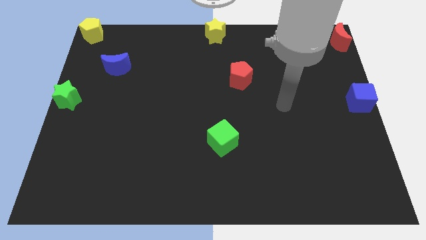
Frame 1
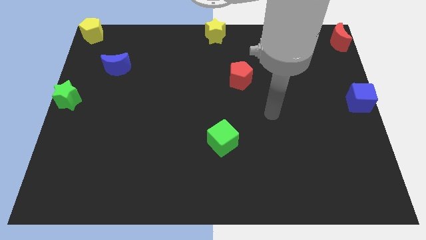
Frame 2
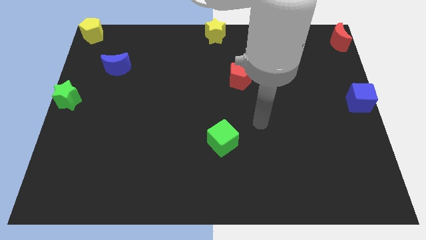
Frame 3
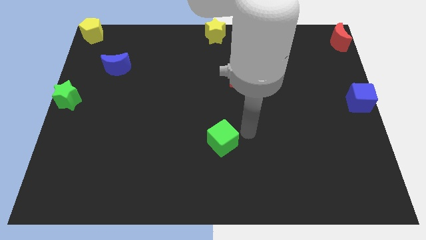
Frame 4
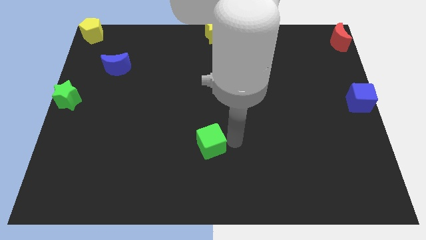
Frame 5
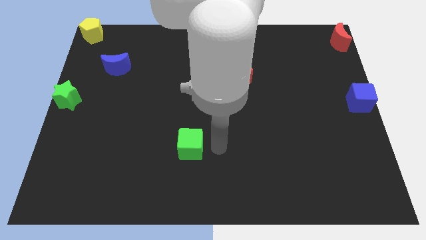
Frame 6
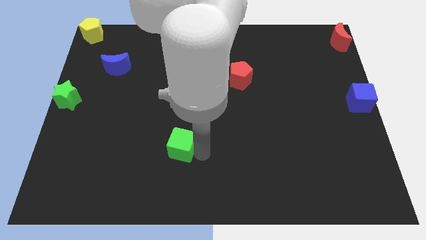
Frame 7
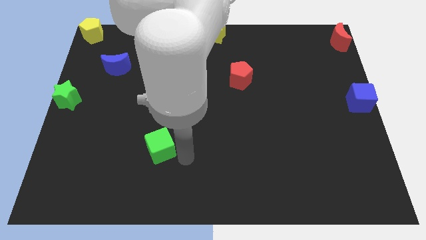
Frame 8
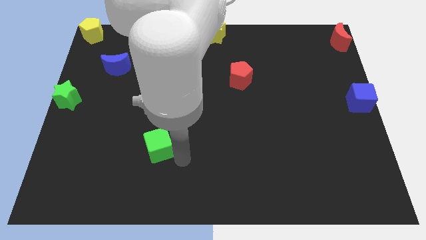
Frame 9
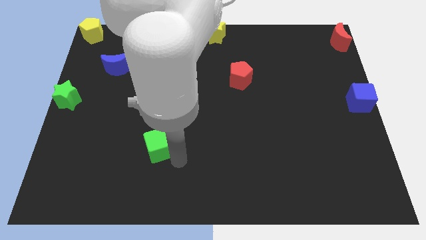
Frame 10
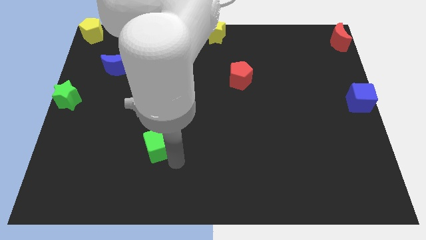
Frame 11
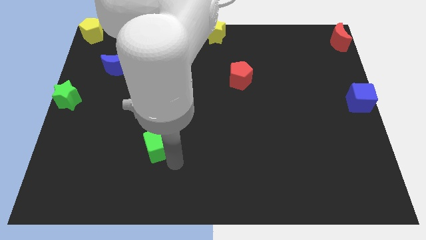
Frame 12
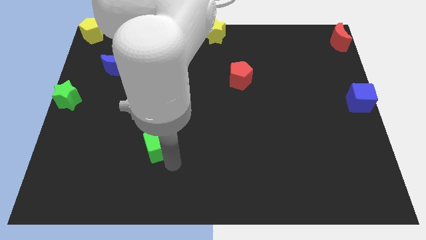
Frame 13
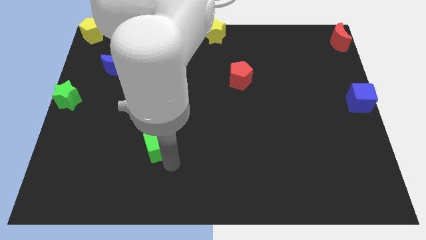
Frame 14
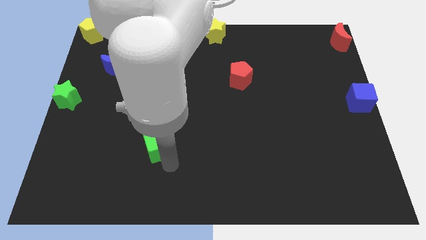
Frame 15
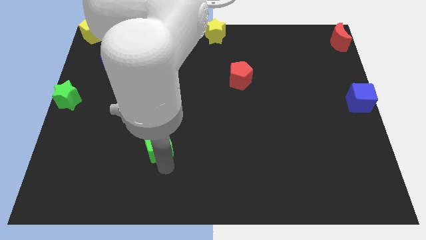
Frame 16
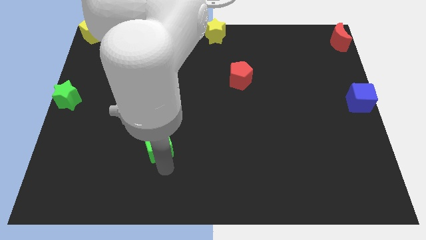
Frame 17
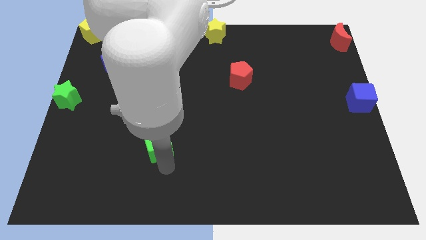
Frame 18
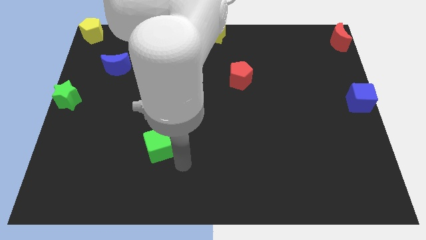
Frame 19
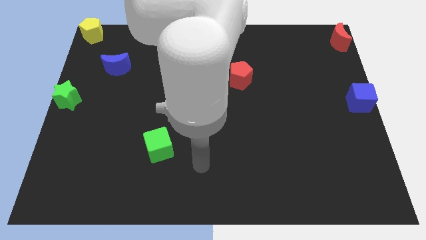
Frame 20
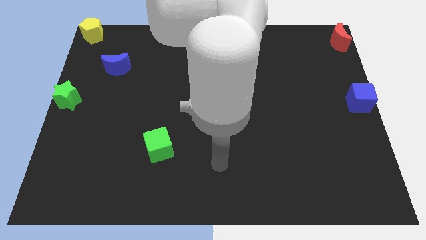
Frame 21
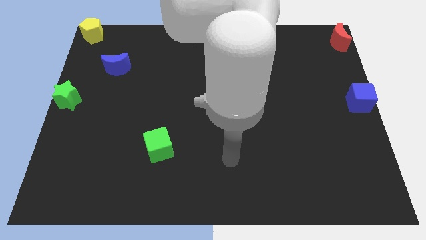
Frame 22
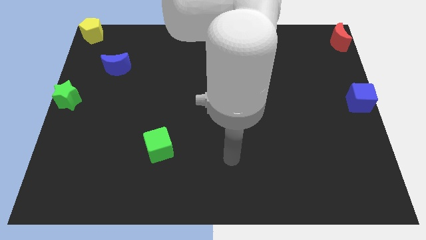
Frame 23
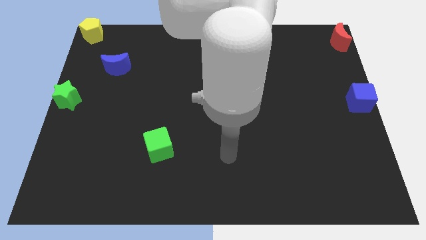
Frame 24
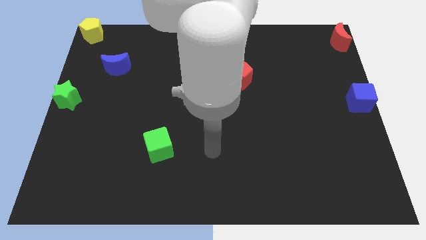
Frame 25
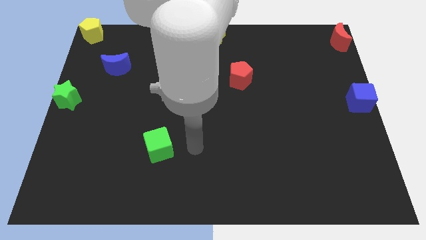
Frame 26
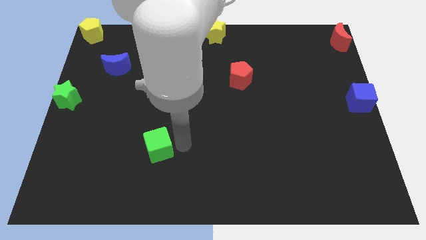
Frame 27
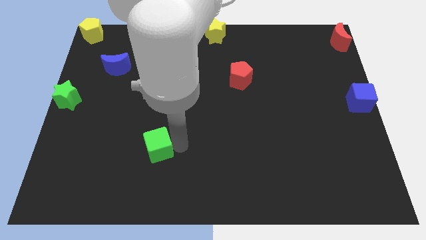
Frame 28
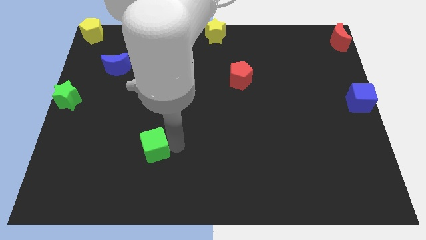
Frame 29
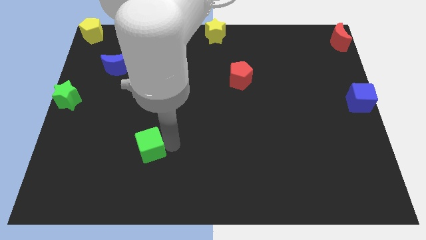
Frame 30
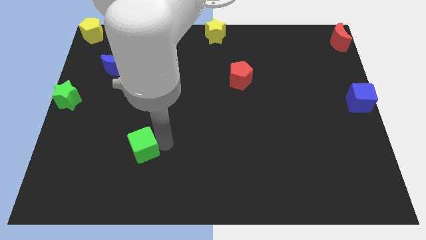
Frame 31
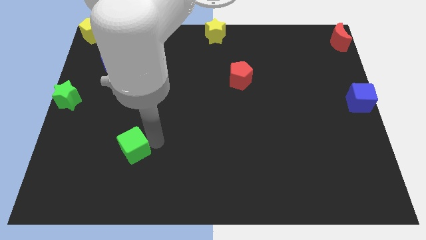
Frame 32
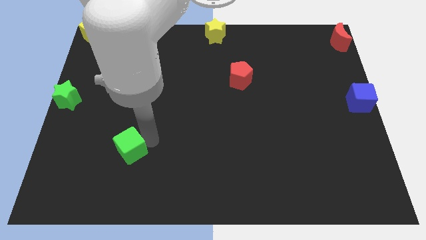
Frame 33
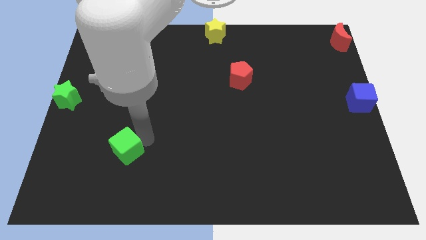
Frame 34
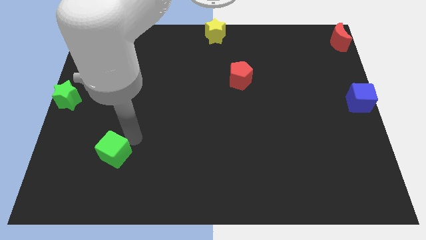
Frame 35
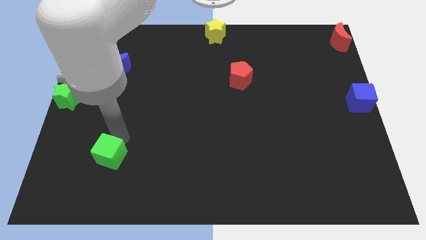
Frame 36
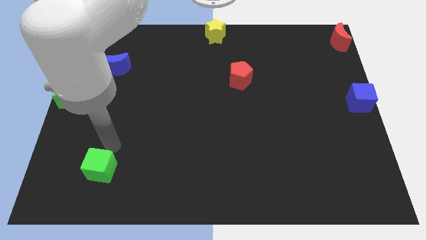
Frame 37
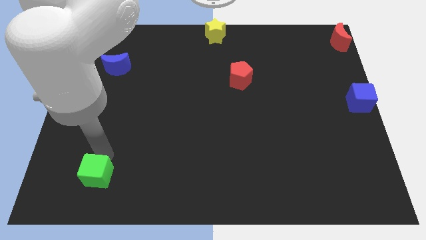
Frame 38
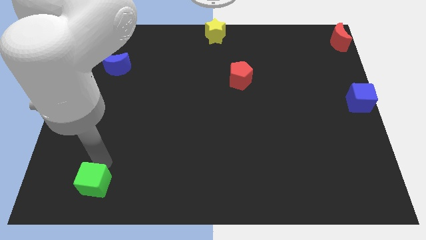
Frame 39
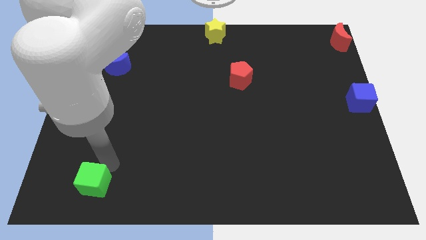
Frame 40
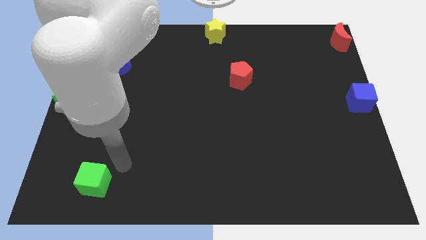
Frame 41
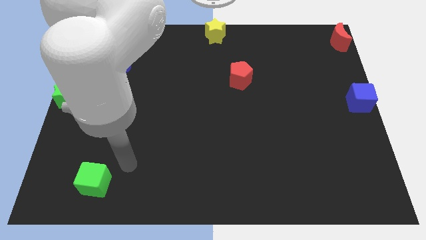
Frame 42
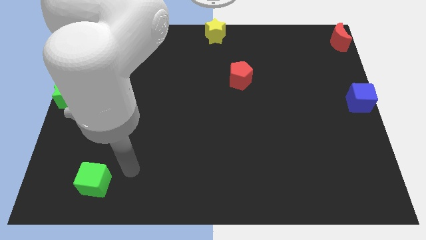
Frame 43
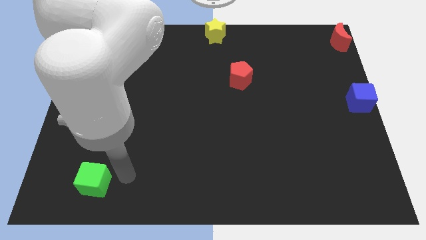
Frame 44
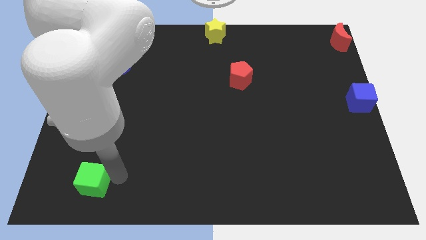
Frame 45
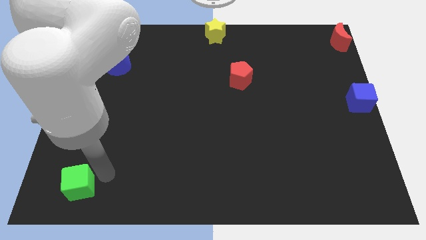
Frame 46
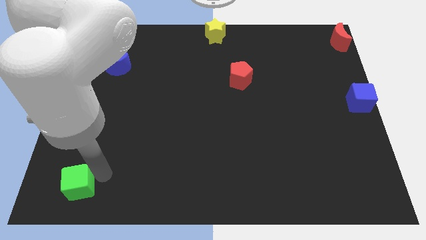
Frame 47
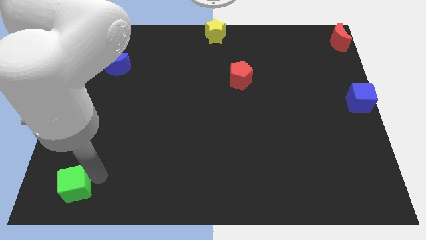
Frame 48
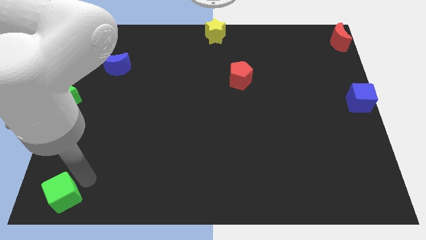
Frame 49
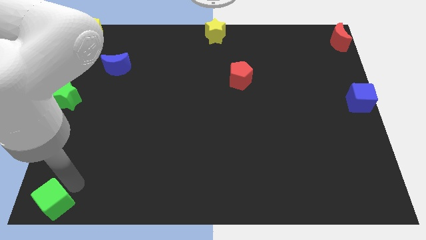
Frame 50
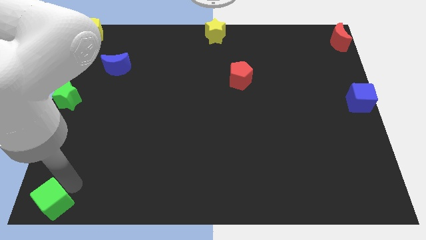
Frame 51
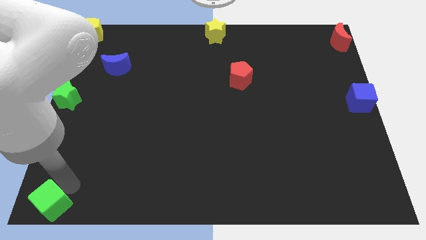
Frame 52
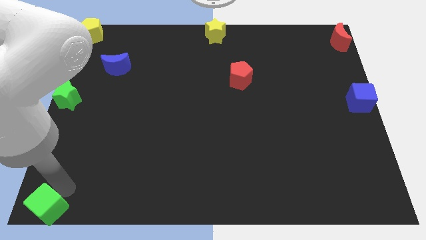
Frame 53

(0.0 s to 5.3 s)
push the green cube towards the bottom left corner of the board

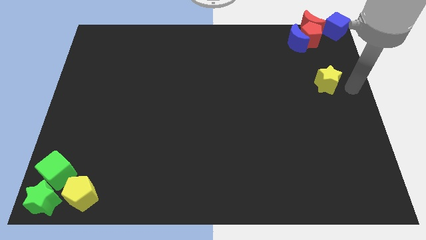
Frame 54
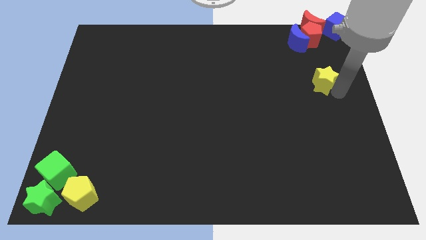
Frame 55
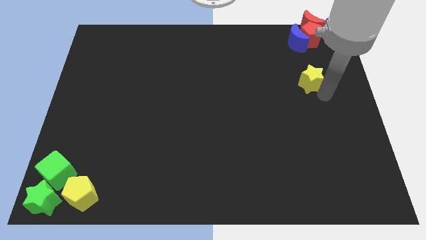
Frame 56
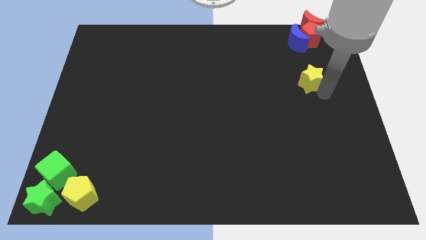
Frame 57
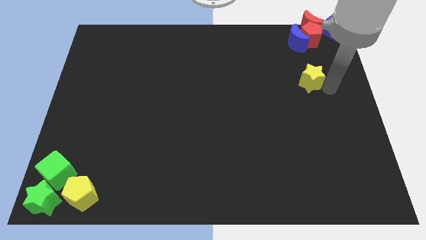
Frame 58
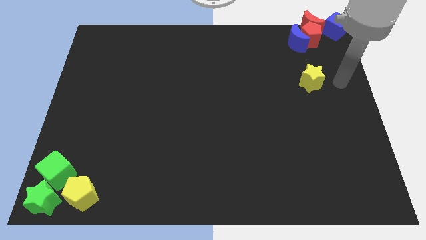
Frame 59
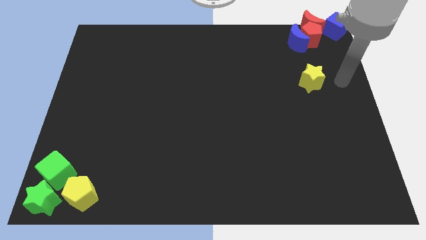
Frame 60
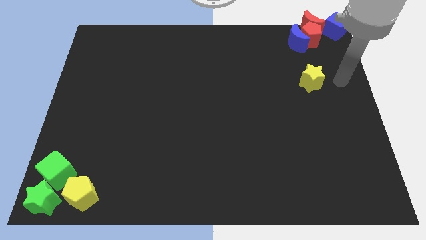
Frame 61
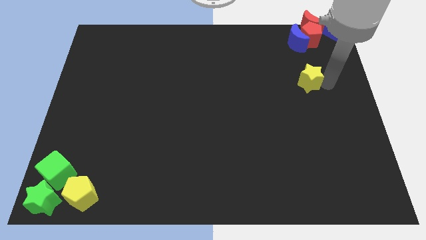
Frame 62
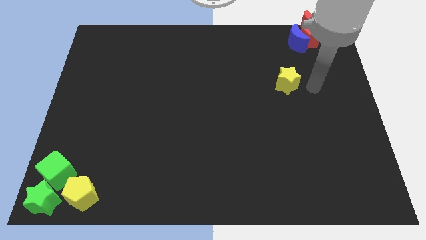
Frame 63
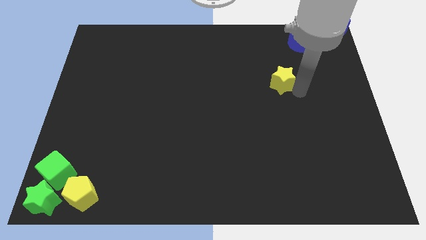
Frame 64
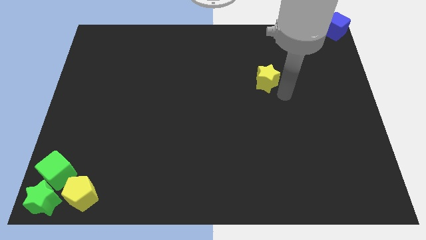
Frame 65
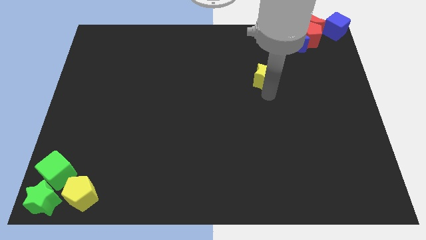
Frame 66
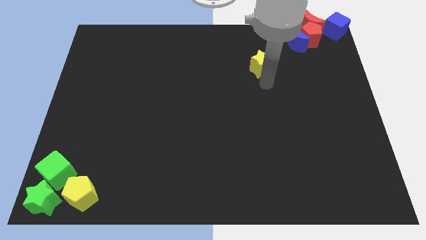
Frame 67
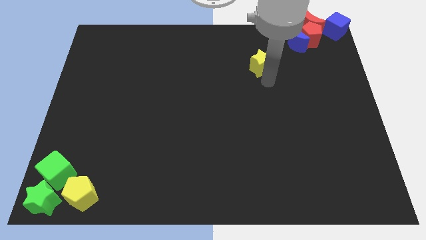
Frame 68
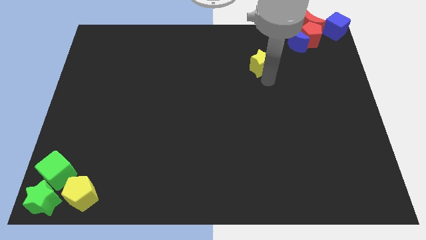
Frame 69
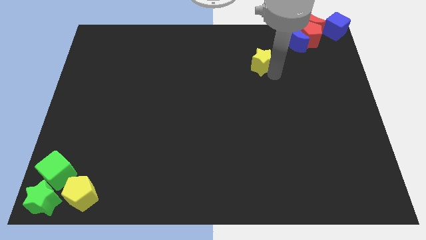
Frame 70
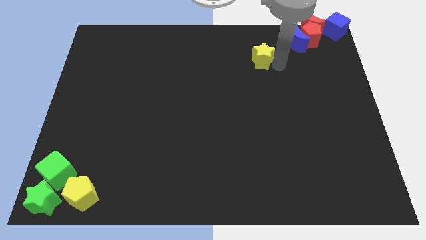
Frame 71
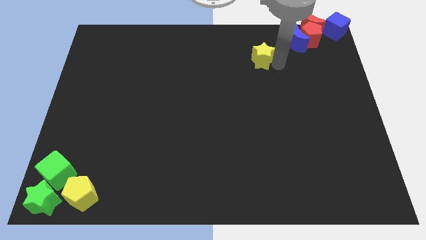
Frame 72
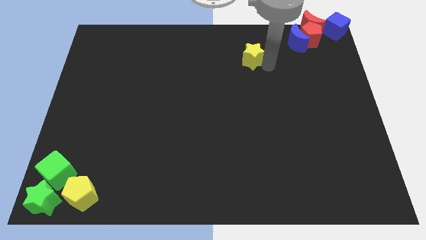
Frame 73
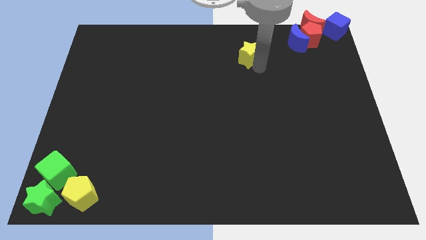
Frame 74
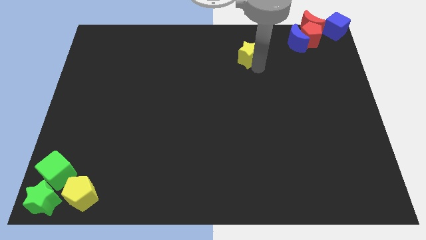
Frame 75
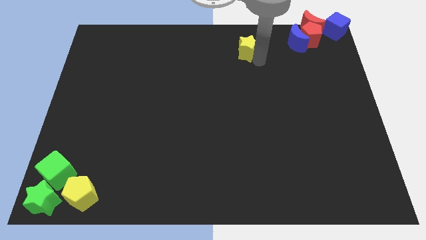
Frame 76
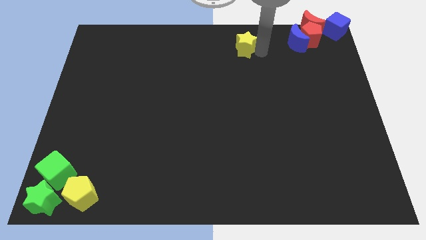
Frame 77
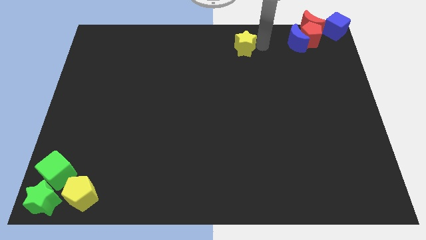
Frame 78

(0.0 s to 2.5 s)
push the yellow star towards the top center of the board

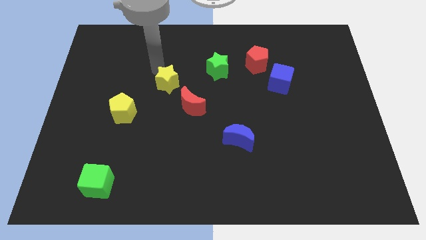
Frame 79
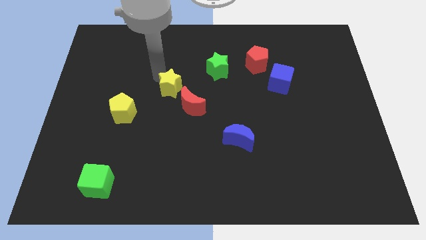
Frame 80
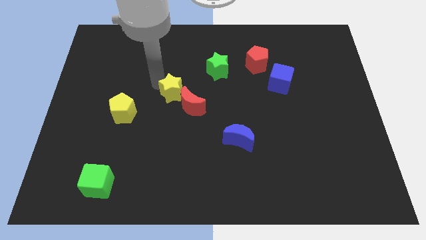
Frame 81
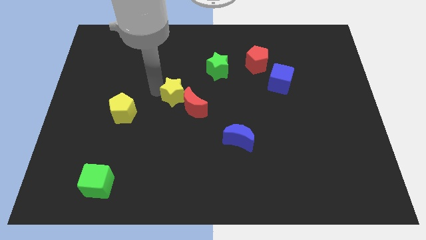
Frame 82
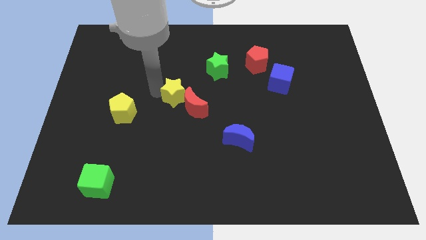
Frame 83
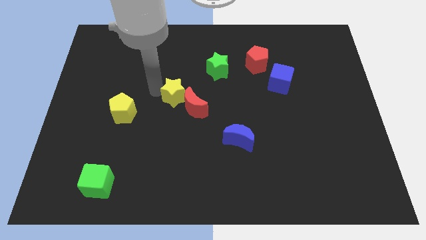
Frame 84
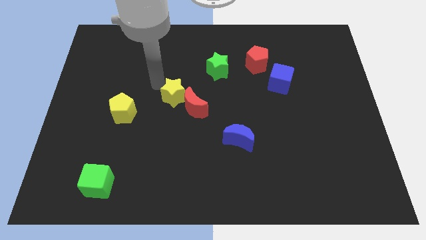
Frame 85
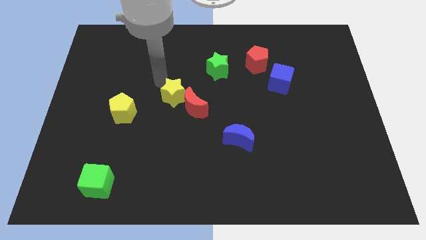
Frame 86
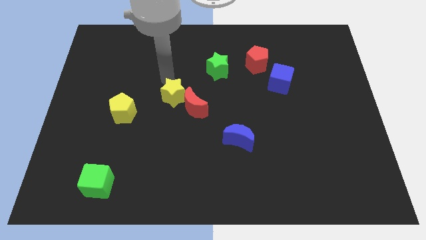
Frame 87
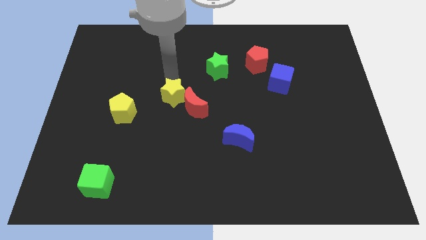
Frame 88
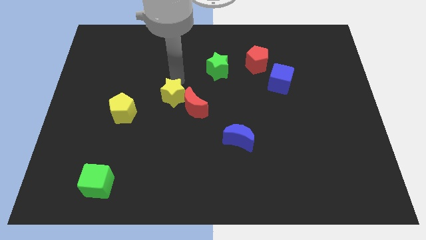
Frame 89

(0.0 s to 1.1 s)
push yellow star in to red crescent

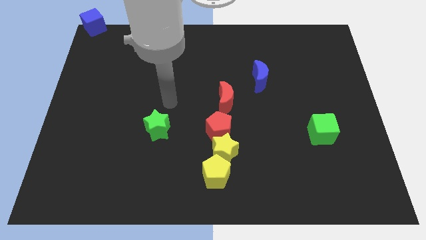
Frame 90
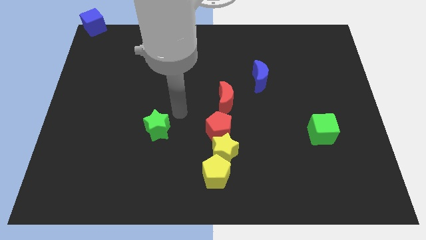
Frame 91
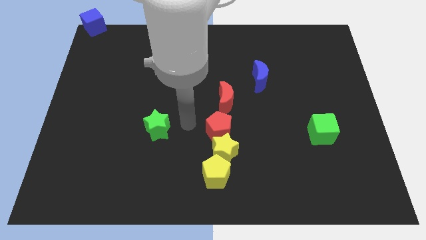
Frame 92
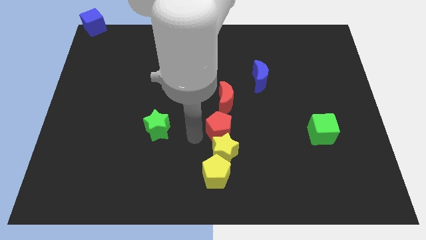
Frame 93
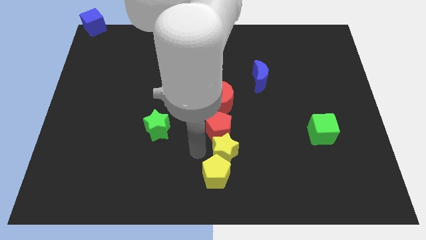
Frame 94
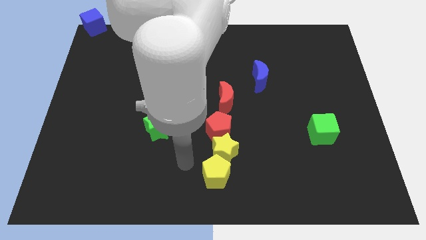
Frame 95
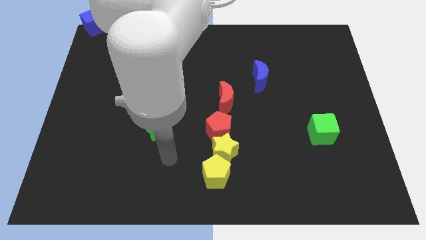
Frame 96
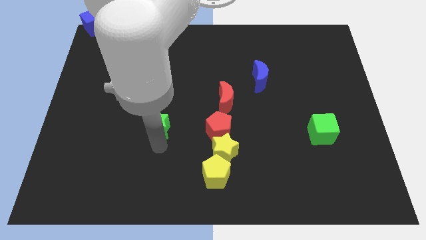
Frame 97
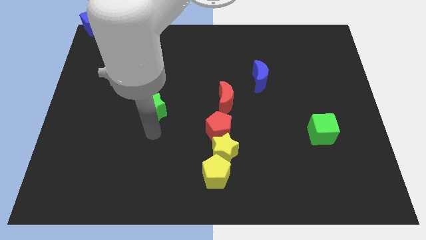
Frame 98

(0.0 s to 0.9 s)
touch the bottom of green star
